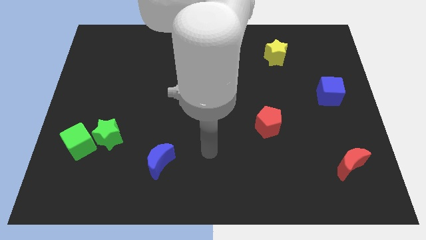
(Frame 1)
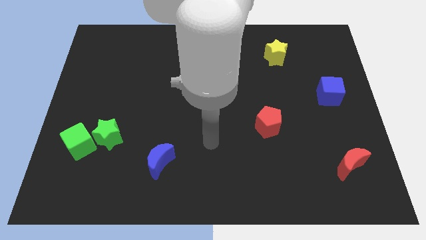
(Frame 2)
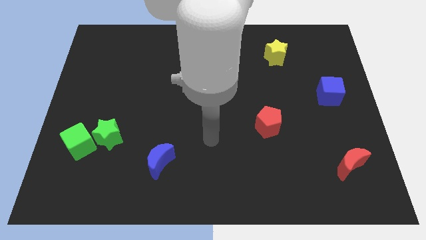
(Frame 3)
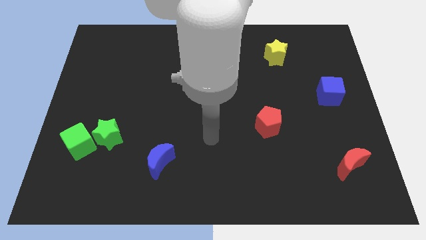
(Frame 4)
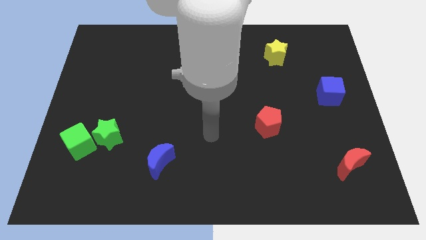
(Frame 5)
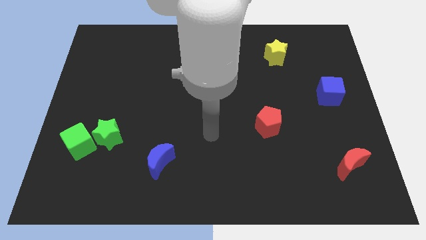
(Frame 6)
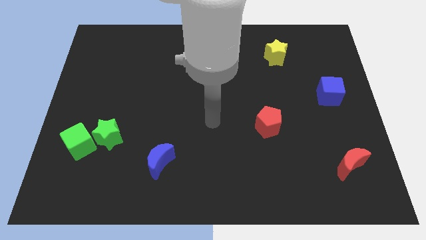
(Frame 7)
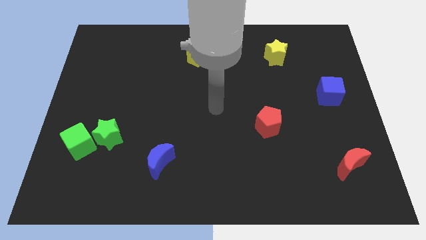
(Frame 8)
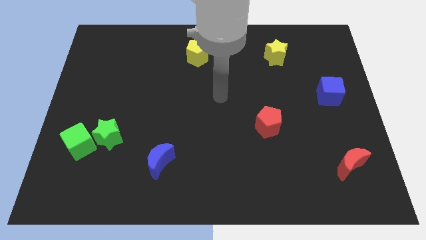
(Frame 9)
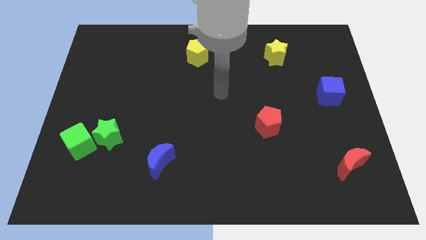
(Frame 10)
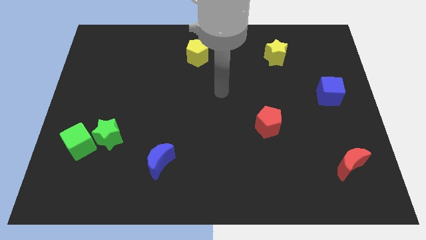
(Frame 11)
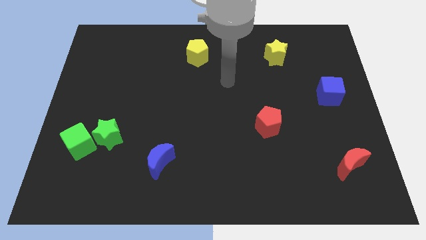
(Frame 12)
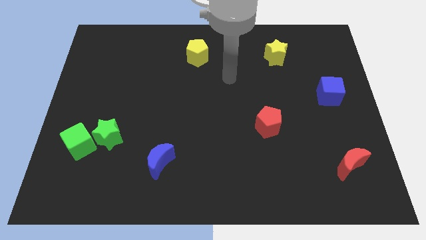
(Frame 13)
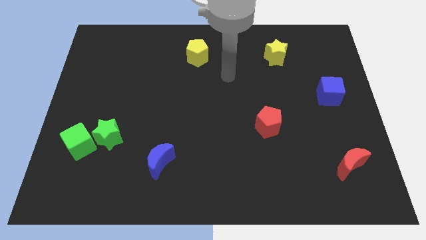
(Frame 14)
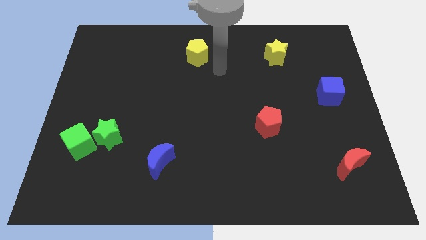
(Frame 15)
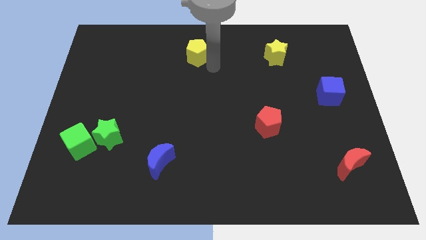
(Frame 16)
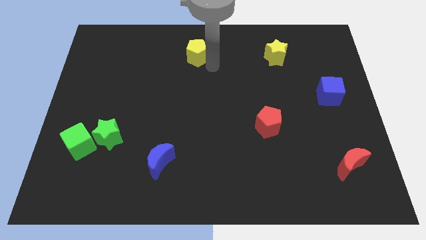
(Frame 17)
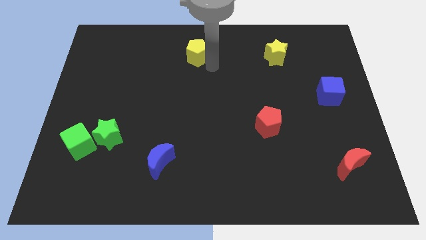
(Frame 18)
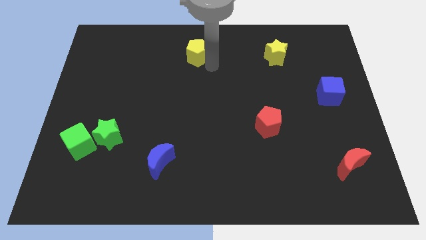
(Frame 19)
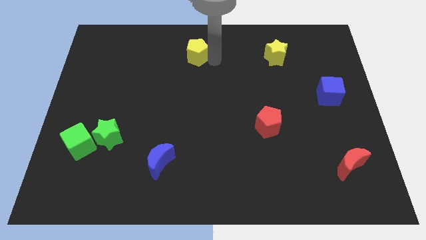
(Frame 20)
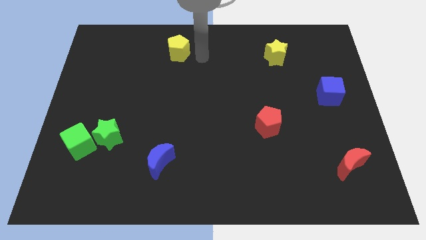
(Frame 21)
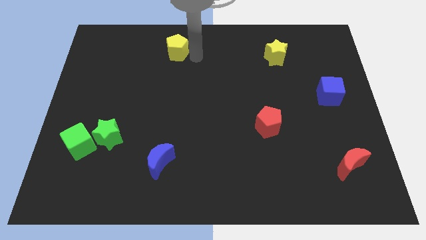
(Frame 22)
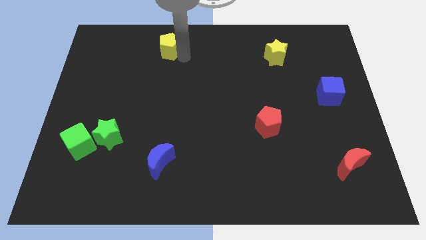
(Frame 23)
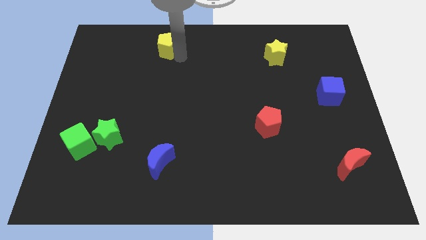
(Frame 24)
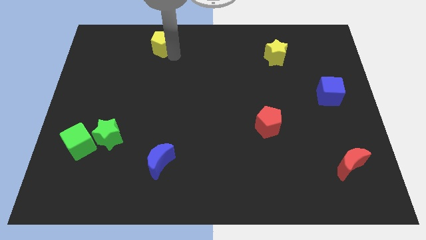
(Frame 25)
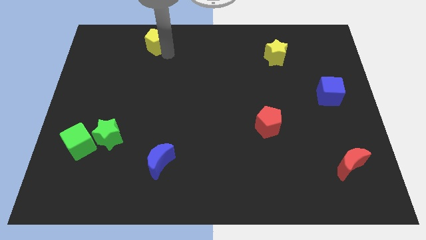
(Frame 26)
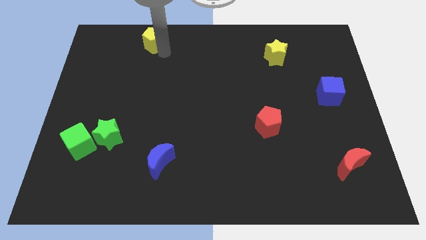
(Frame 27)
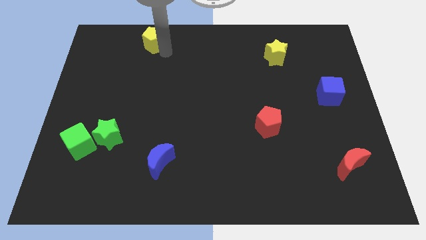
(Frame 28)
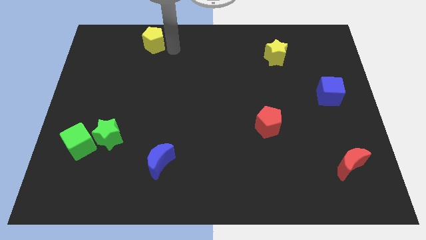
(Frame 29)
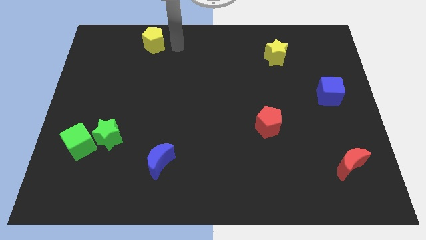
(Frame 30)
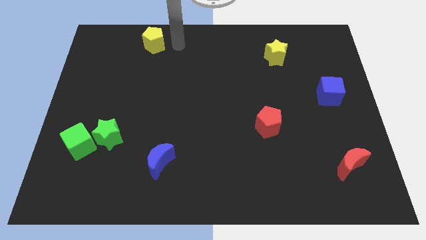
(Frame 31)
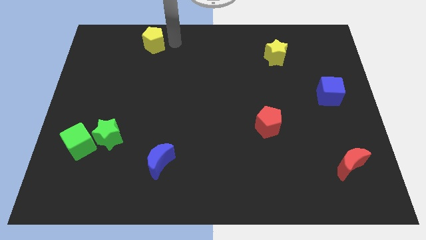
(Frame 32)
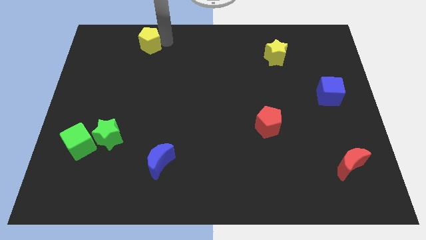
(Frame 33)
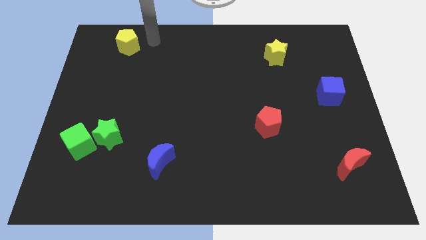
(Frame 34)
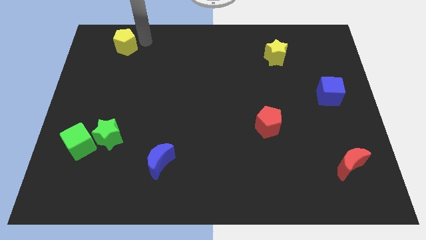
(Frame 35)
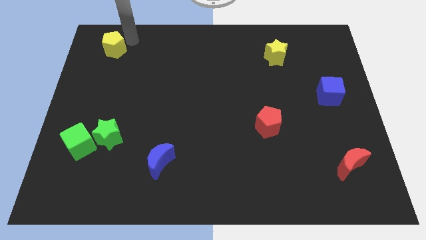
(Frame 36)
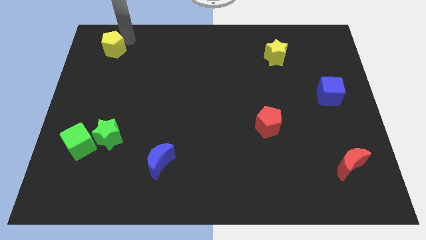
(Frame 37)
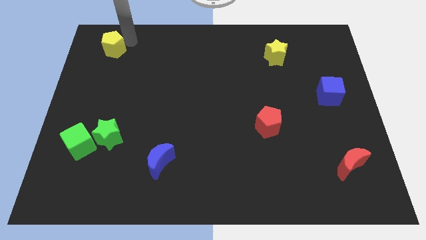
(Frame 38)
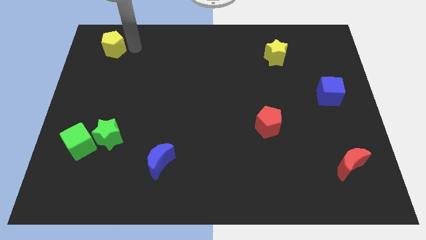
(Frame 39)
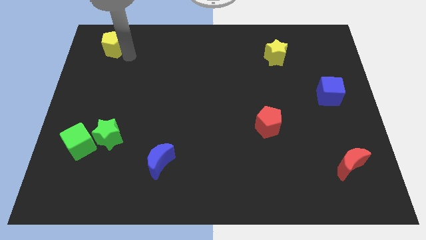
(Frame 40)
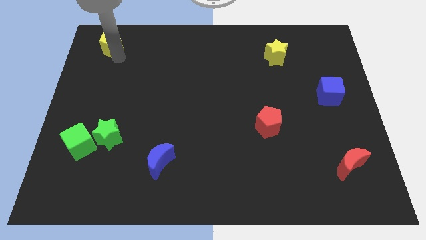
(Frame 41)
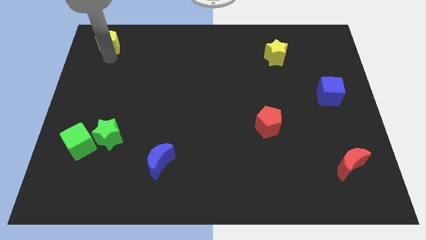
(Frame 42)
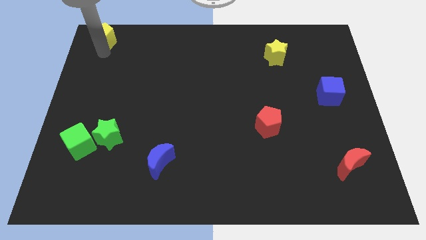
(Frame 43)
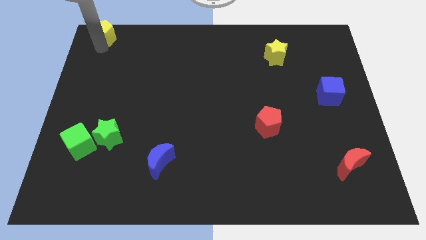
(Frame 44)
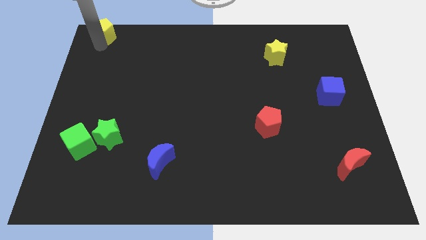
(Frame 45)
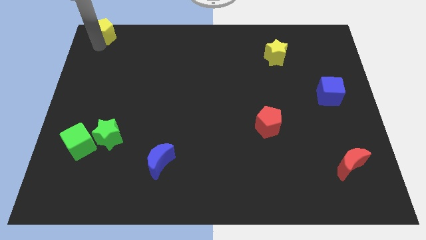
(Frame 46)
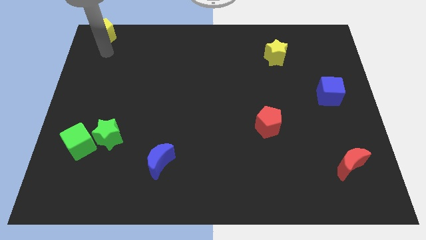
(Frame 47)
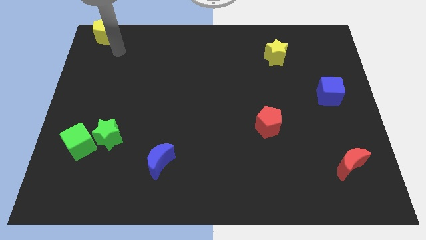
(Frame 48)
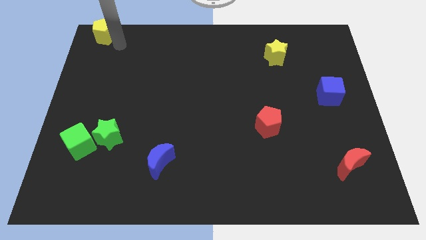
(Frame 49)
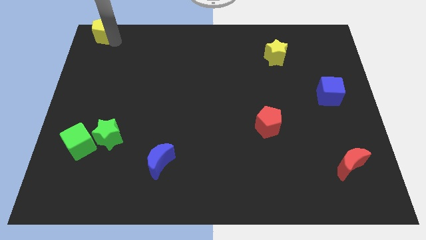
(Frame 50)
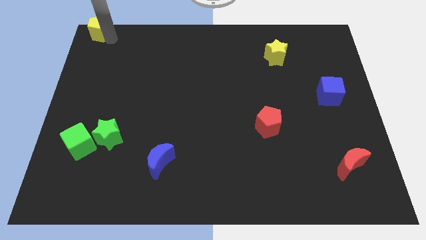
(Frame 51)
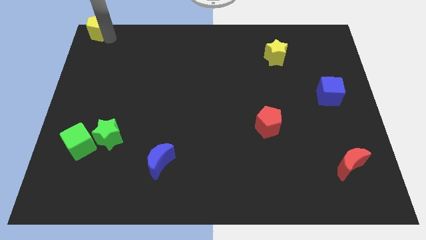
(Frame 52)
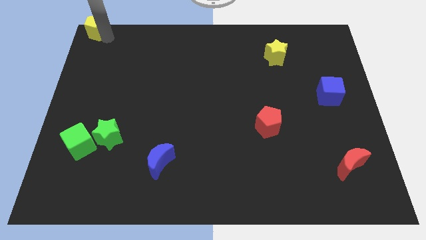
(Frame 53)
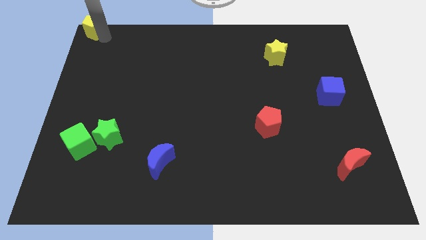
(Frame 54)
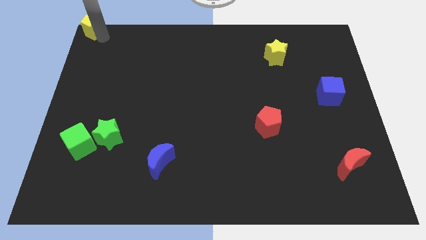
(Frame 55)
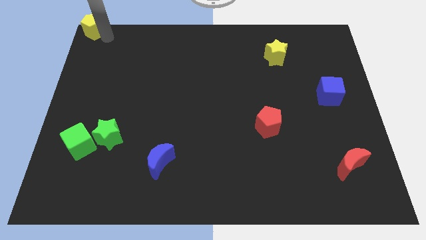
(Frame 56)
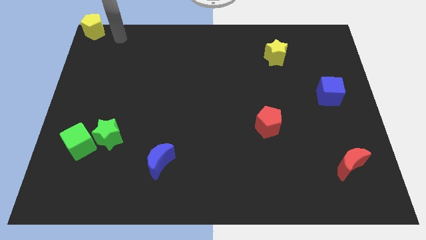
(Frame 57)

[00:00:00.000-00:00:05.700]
push the yellow pentagon top left of the board

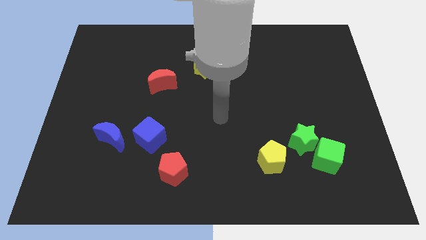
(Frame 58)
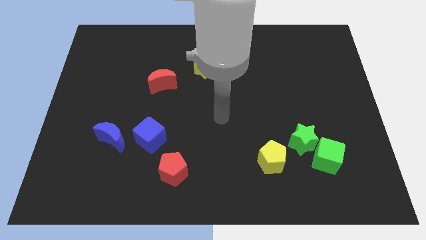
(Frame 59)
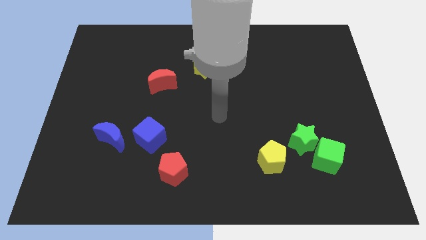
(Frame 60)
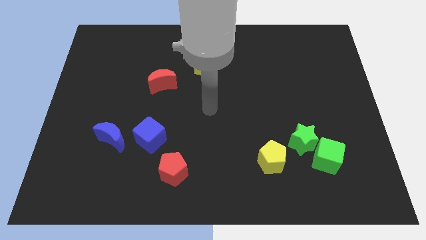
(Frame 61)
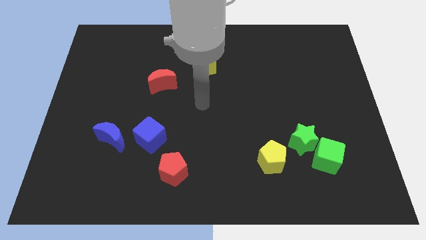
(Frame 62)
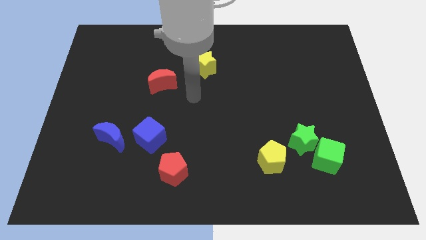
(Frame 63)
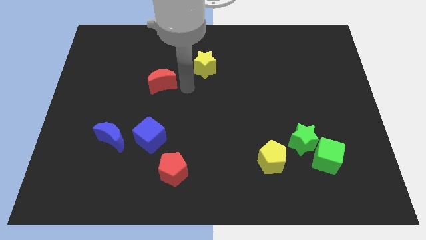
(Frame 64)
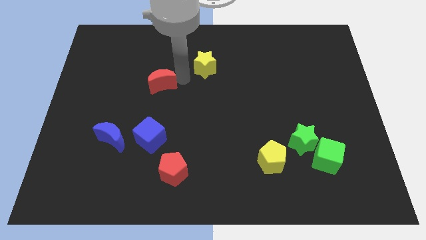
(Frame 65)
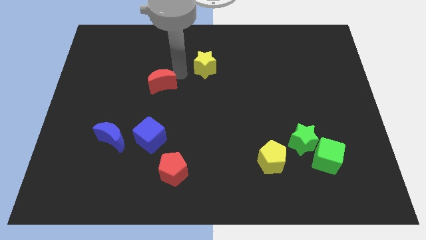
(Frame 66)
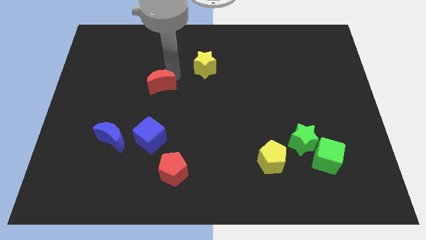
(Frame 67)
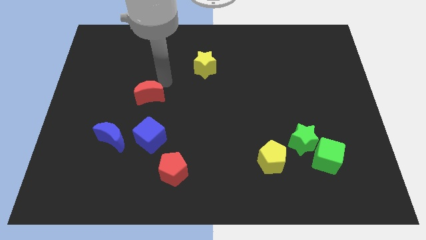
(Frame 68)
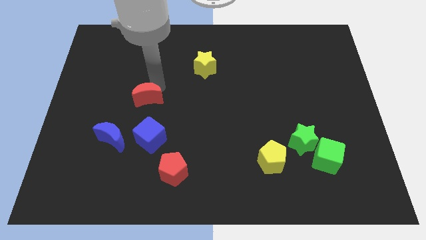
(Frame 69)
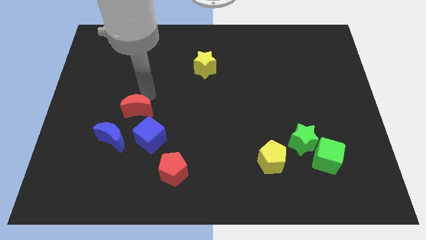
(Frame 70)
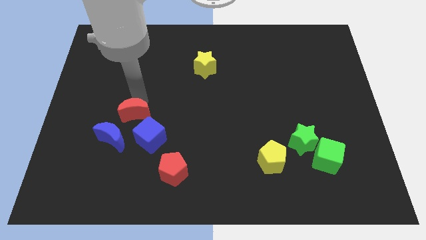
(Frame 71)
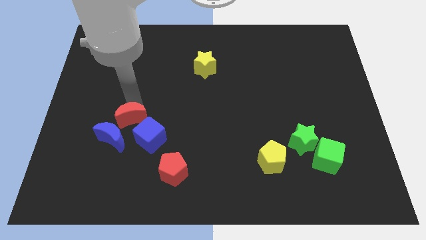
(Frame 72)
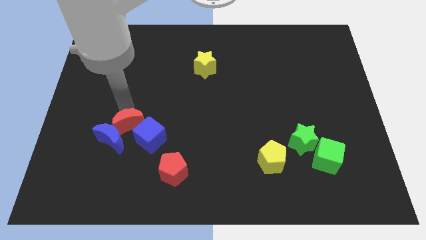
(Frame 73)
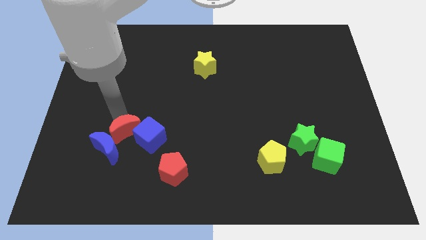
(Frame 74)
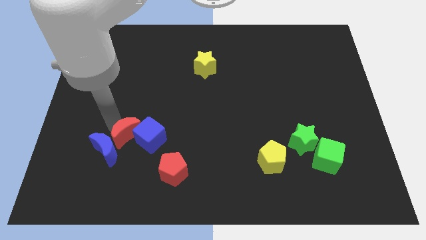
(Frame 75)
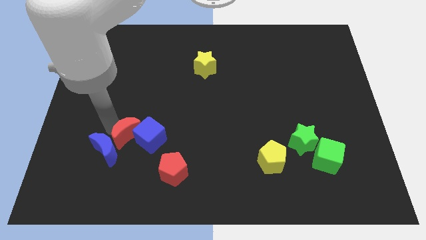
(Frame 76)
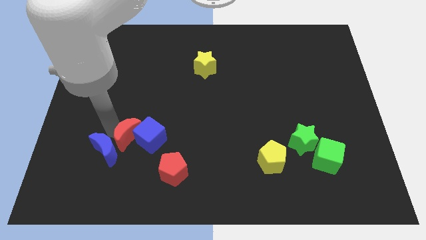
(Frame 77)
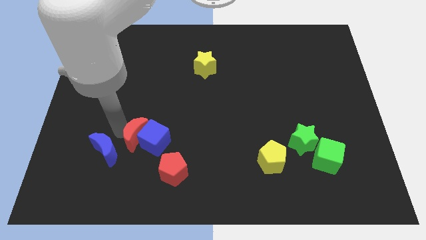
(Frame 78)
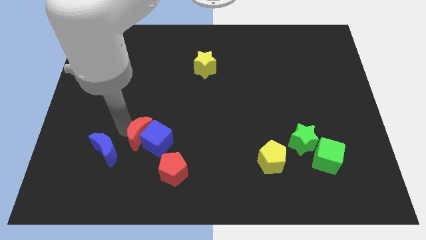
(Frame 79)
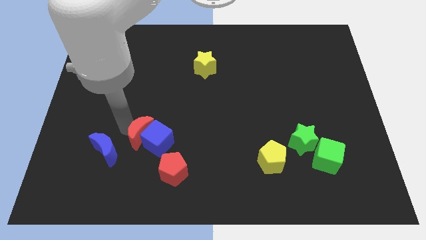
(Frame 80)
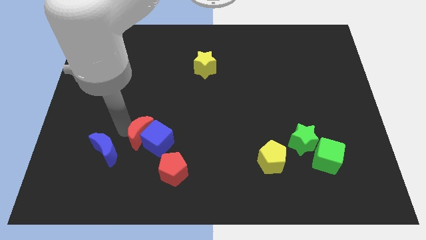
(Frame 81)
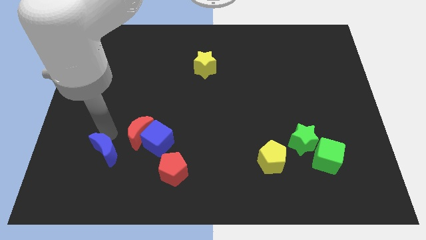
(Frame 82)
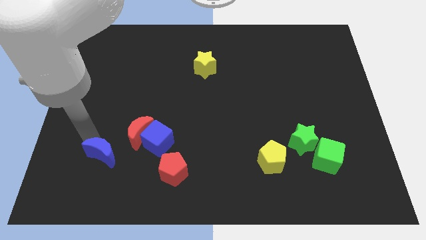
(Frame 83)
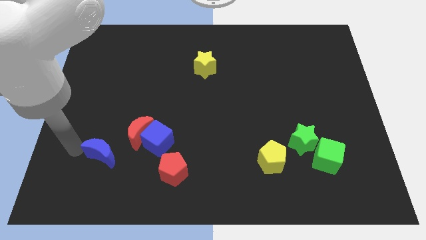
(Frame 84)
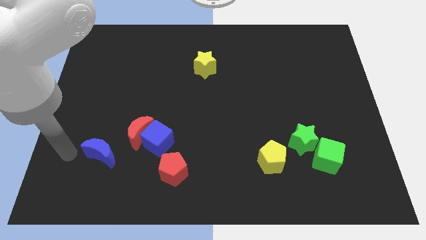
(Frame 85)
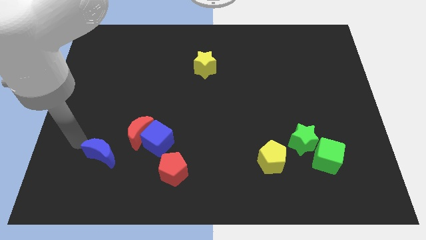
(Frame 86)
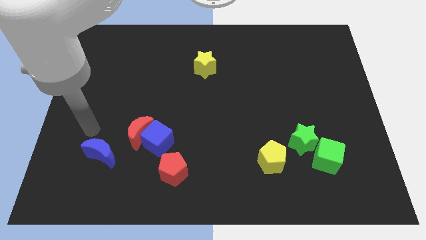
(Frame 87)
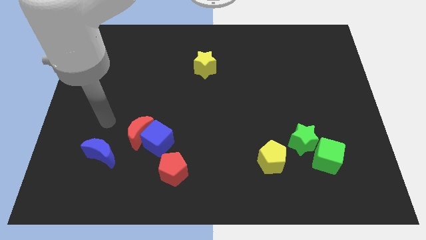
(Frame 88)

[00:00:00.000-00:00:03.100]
slide the red crescent into the left side of the blue cube
